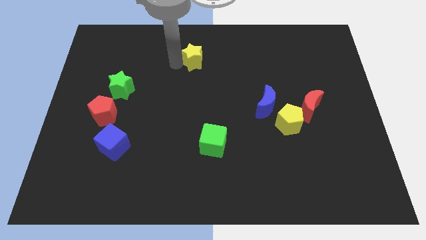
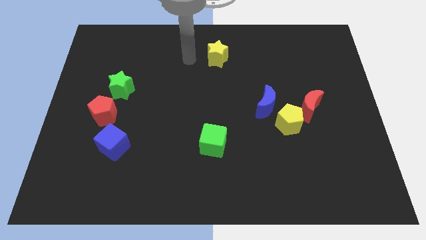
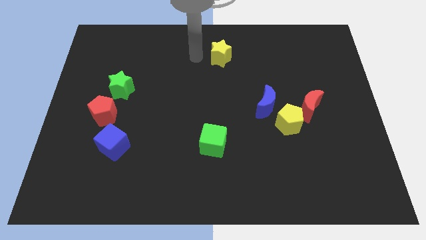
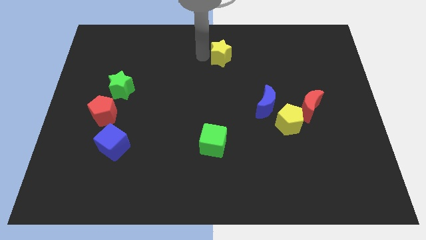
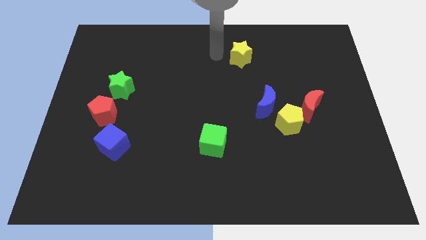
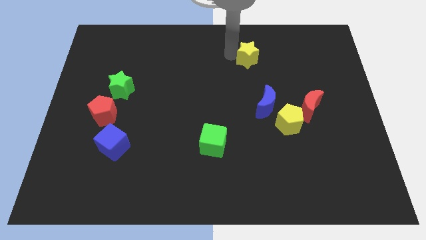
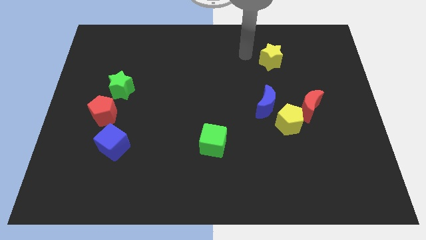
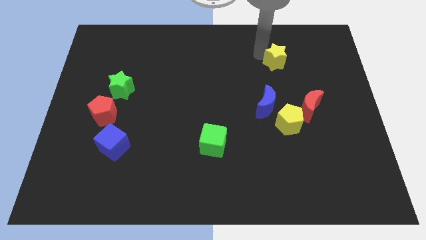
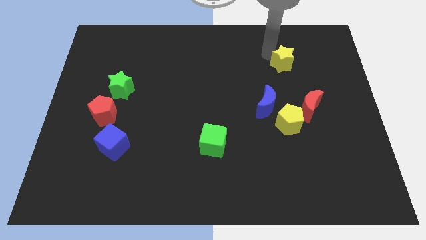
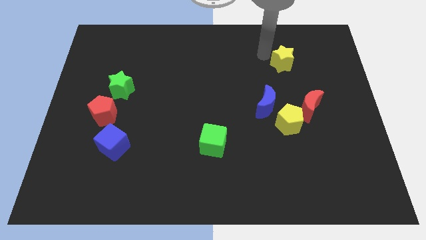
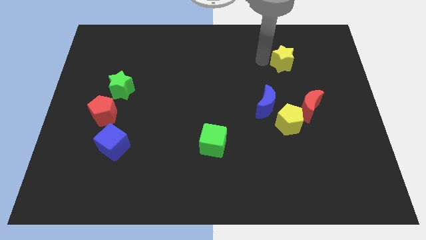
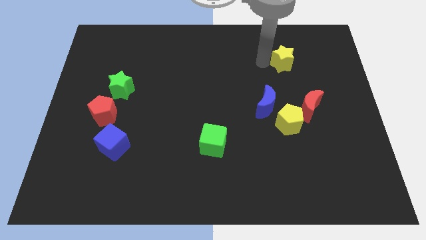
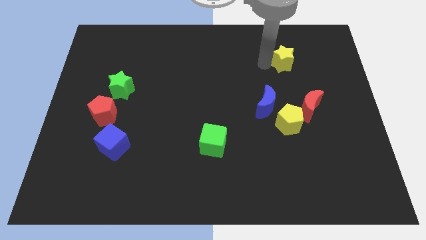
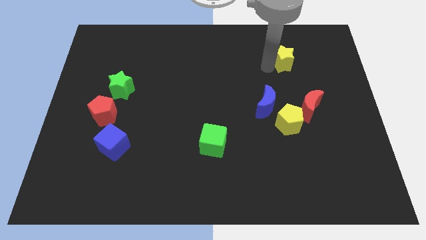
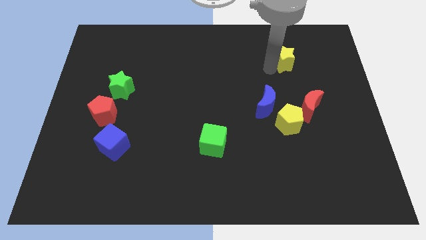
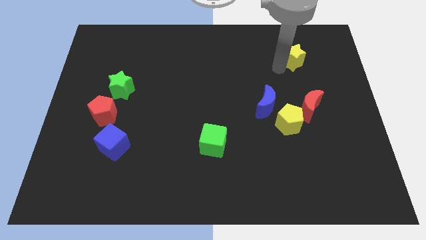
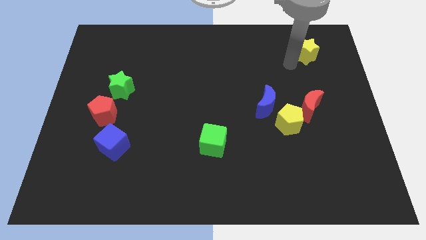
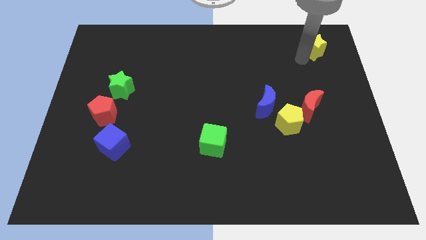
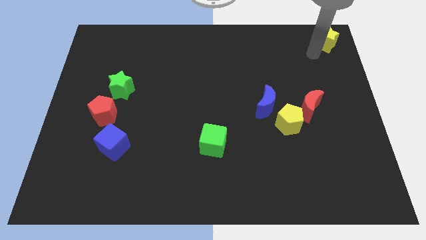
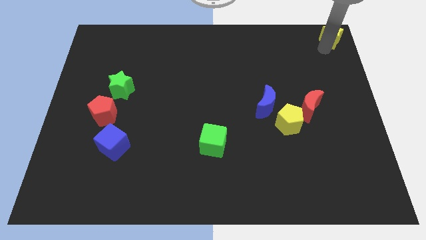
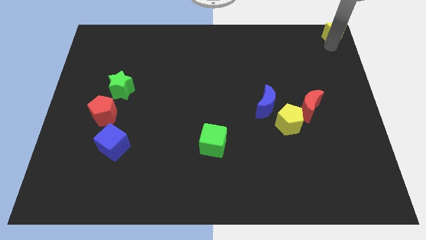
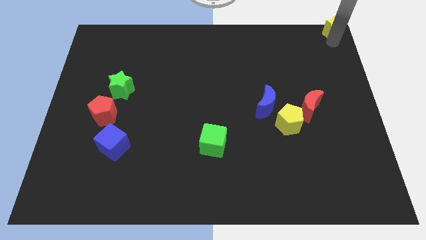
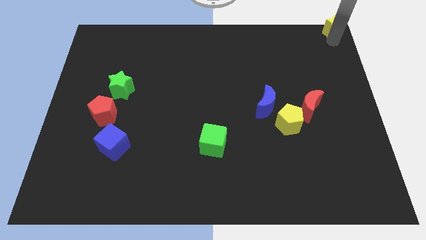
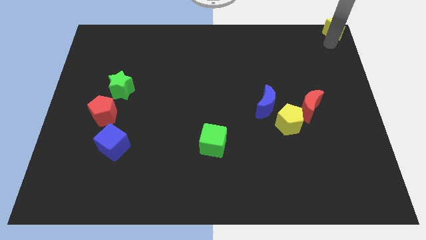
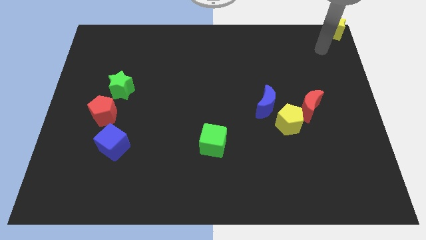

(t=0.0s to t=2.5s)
place the yellow star at the top right corner

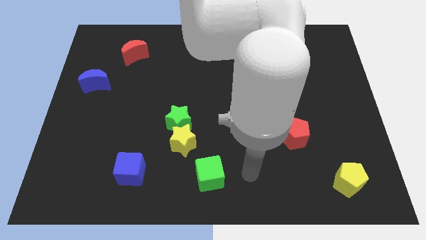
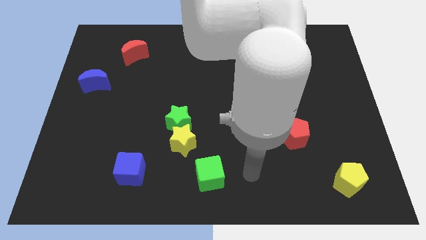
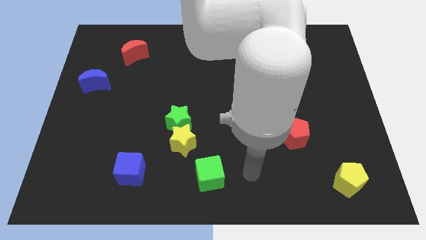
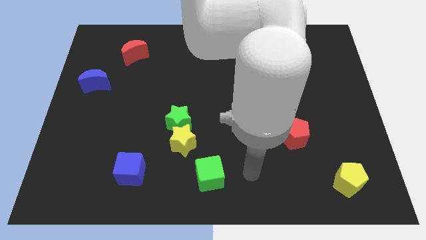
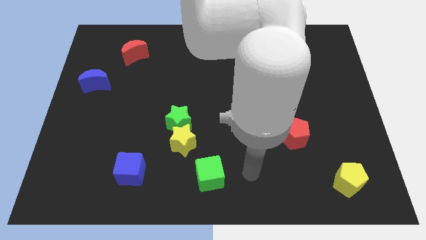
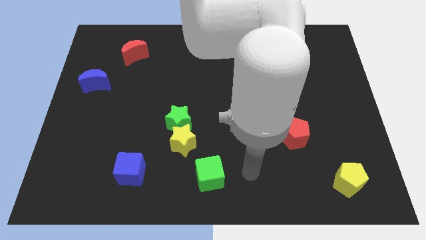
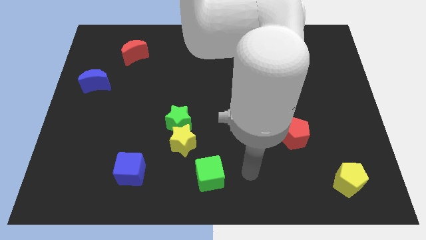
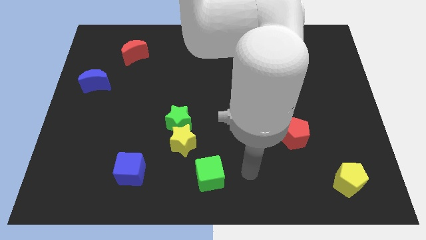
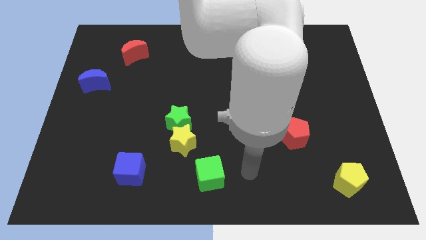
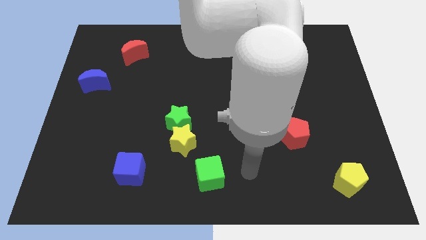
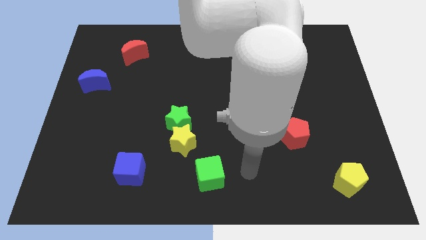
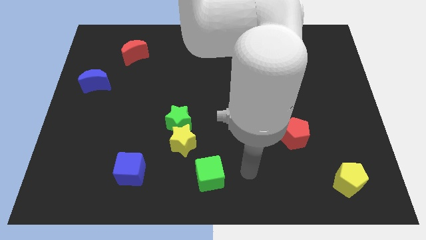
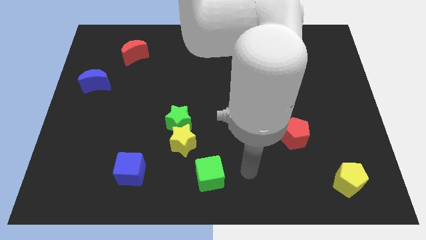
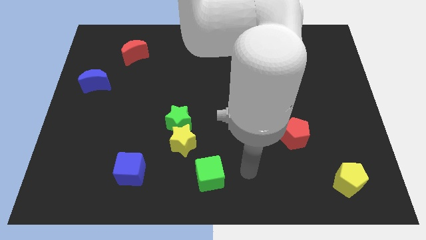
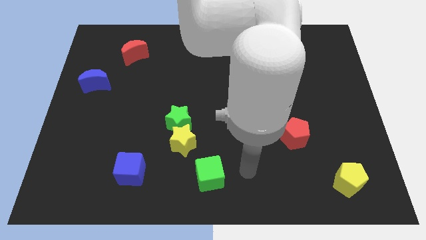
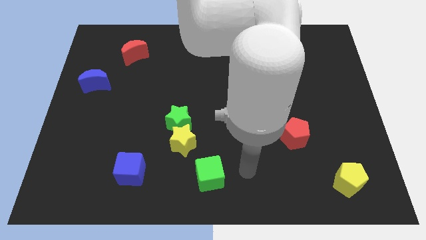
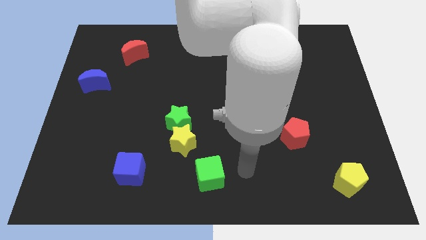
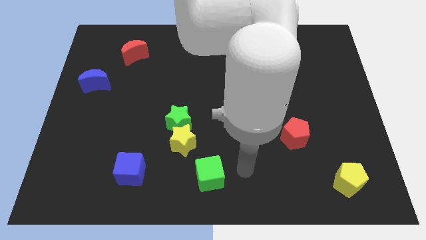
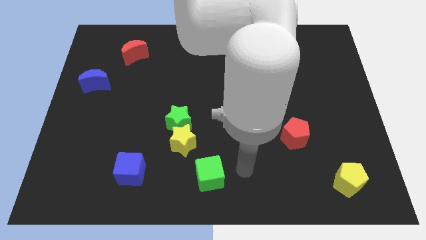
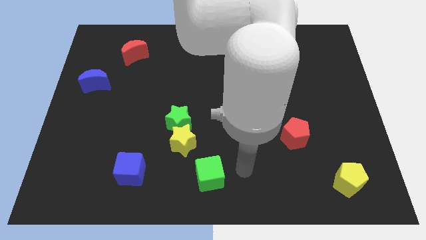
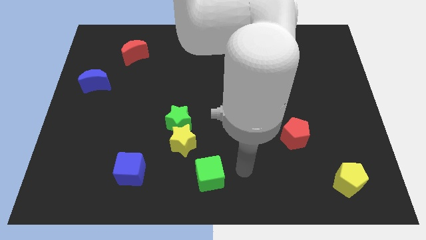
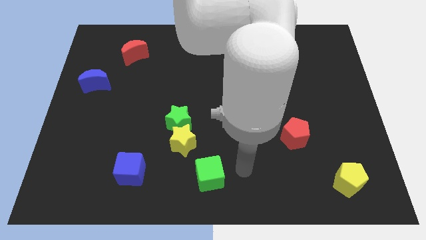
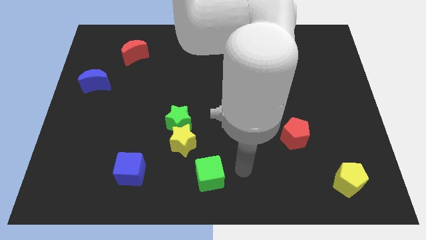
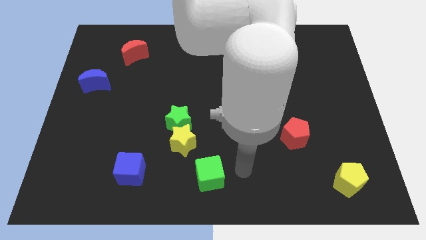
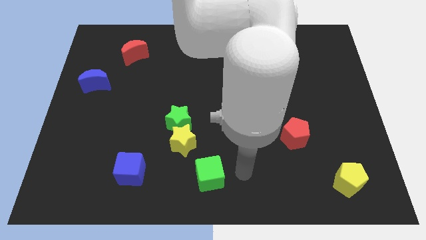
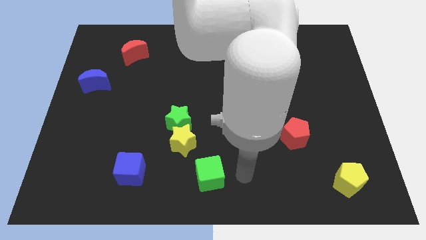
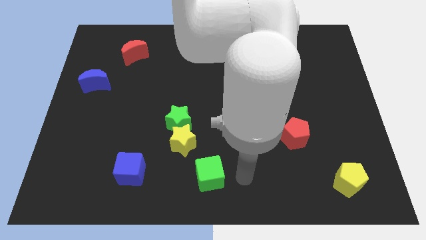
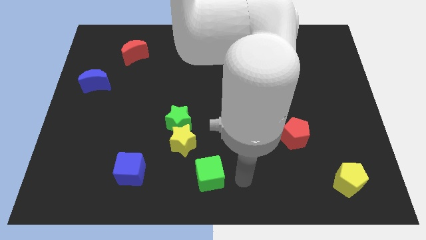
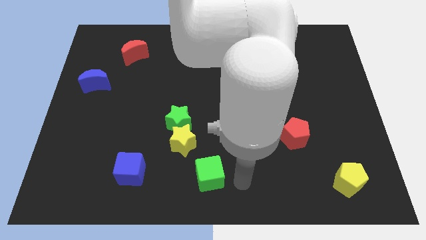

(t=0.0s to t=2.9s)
move the arm below the green cube

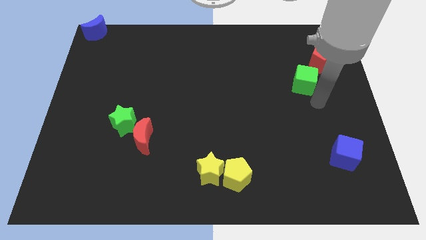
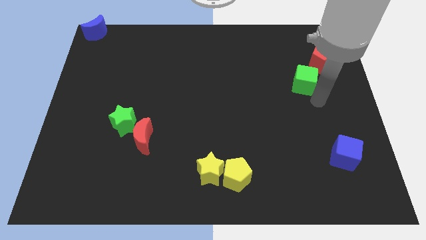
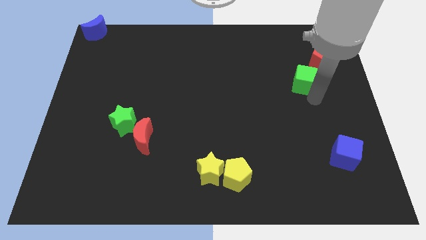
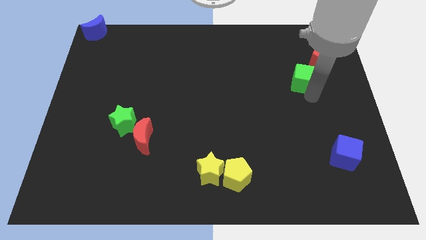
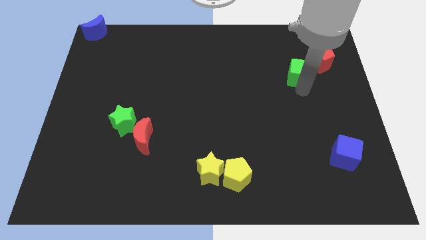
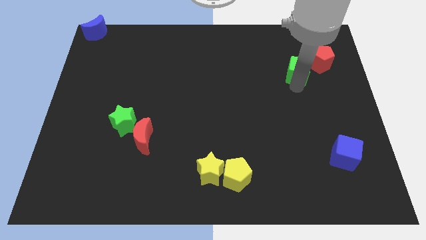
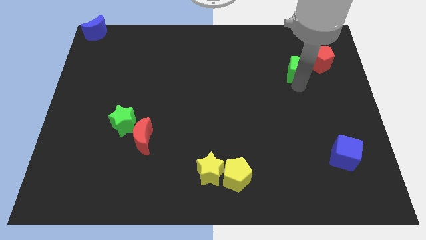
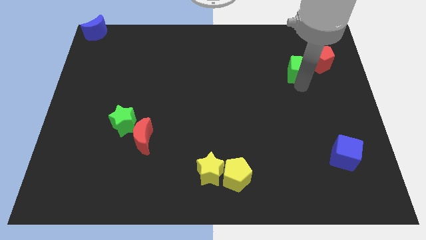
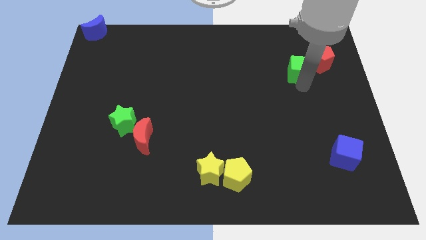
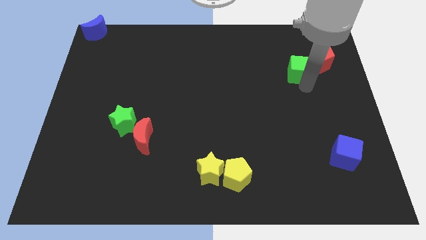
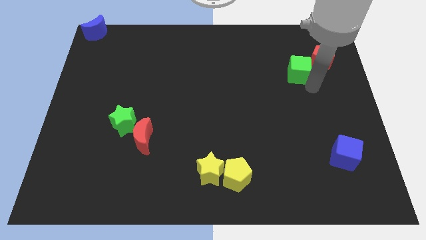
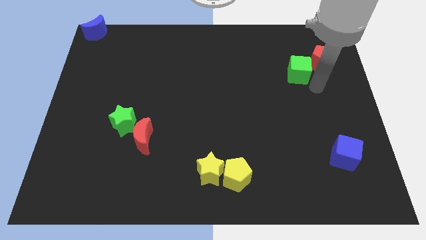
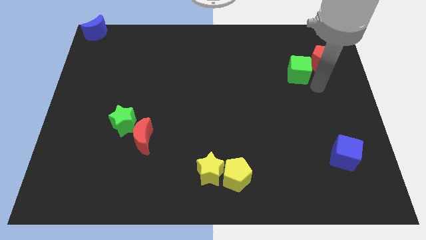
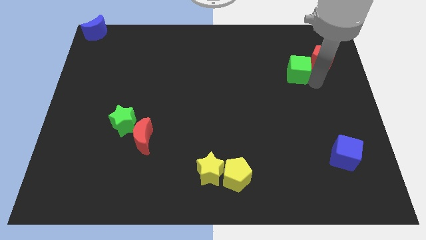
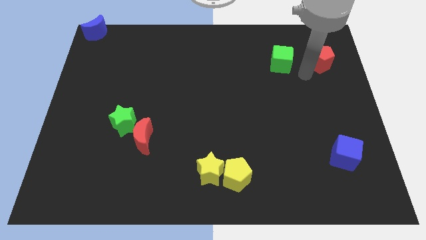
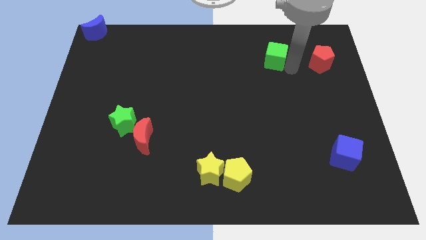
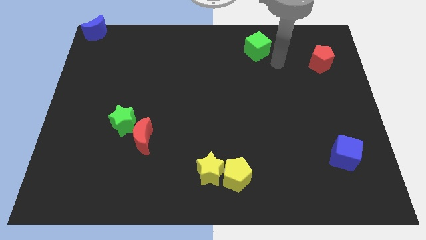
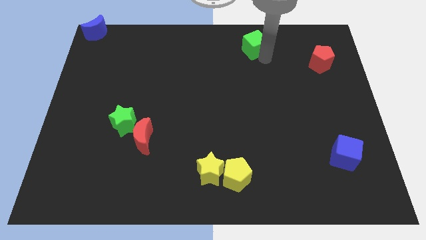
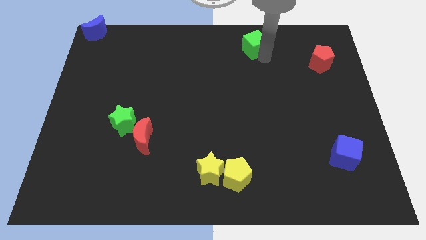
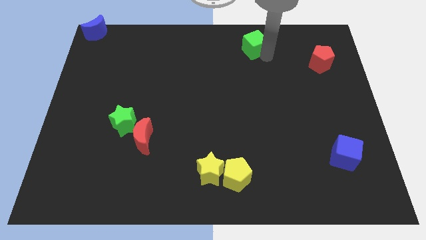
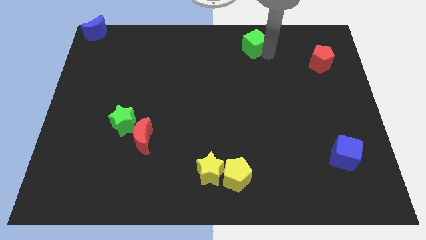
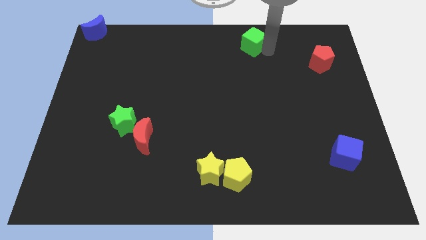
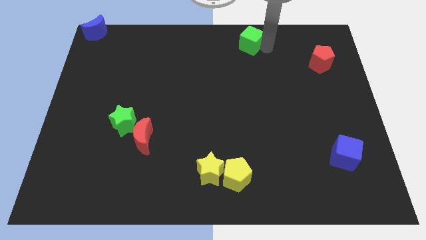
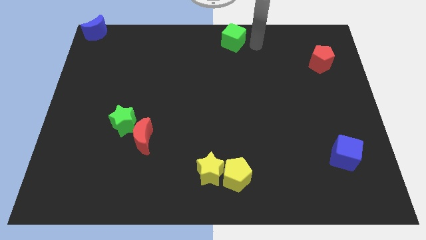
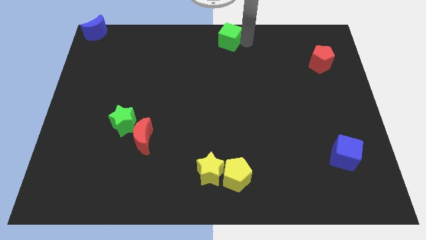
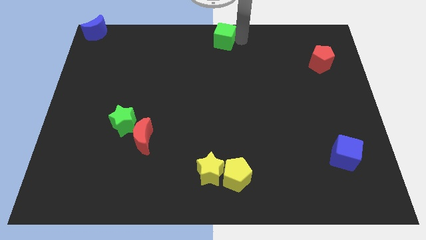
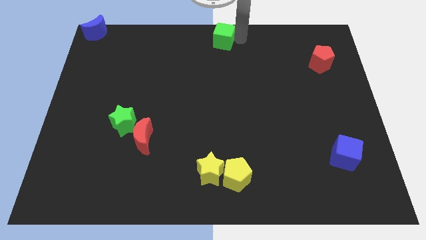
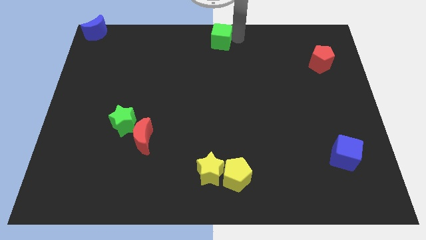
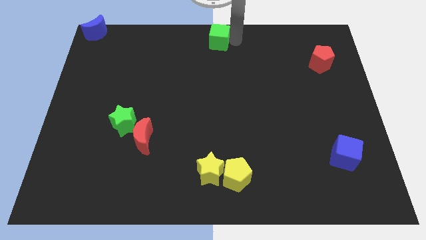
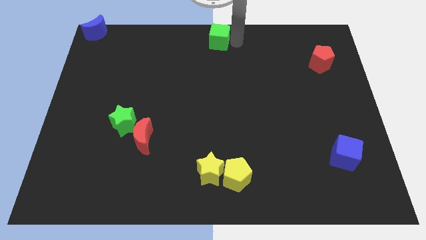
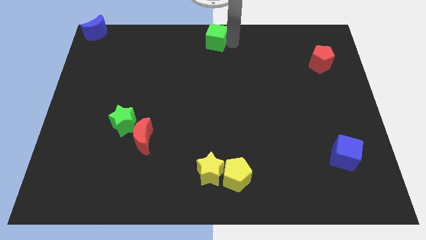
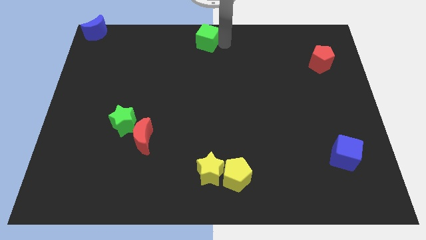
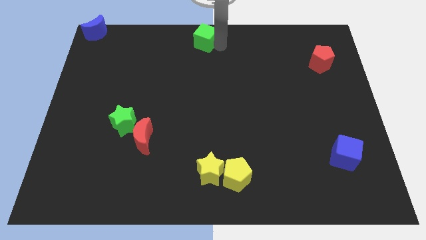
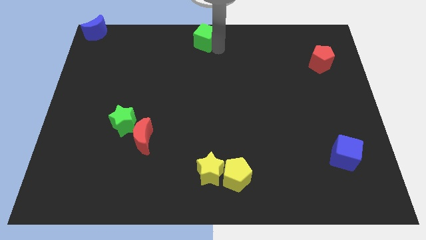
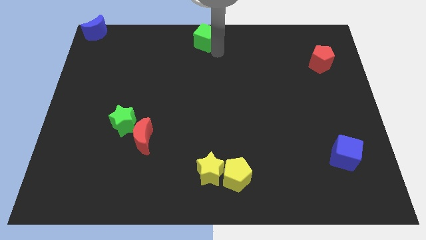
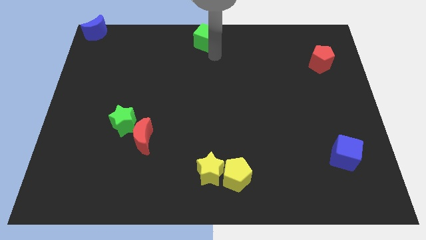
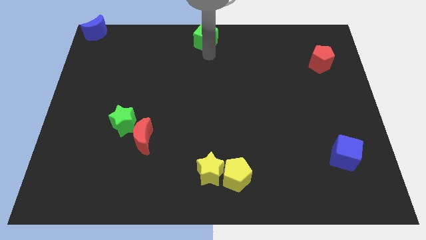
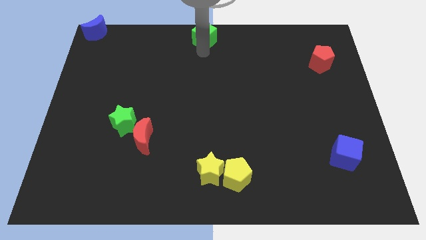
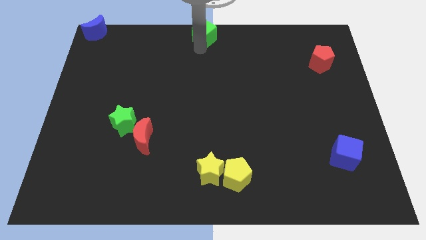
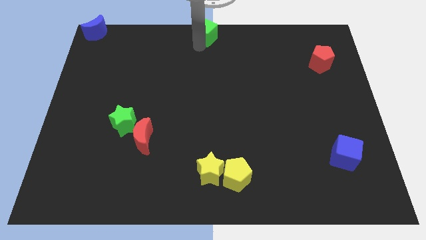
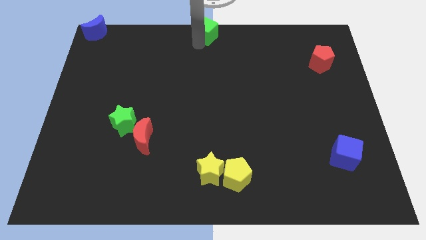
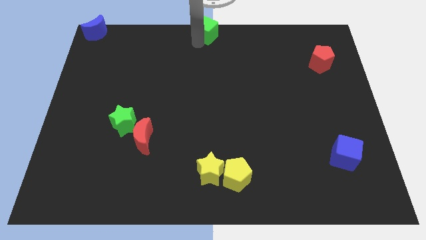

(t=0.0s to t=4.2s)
drag the green cube towards the top middle of the board
